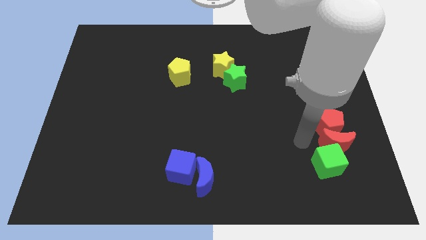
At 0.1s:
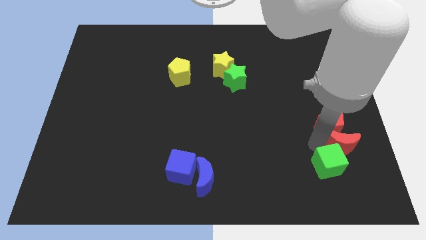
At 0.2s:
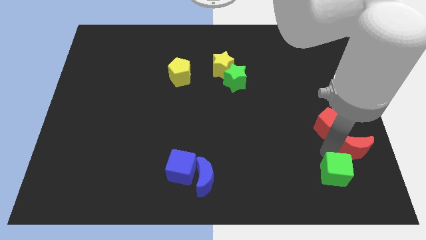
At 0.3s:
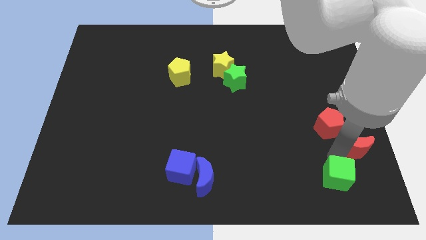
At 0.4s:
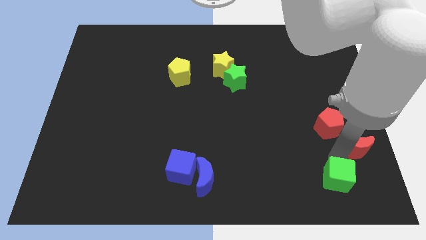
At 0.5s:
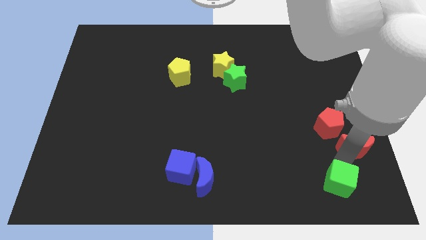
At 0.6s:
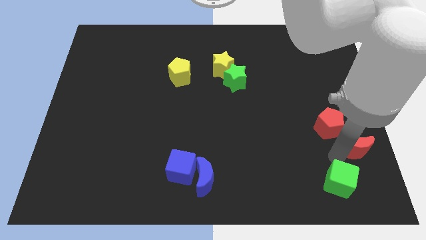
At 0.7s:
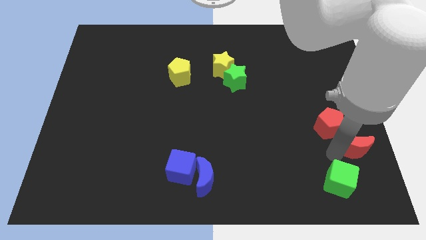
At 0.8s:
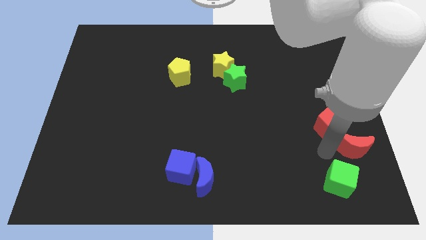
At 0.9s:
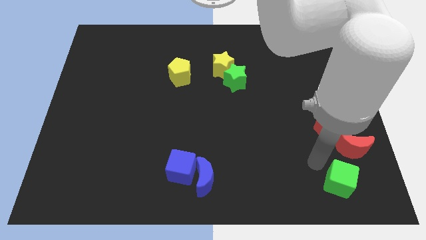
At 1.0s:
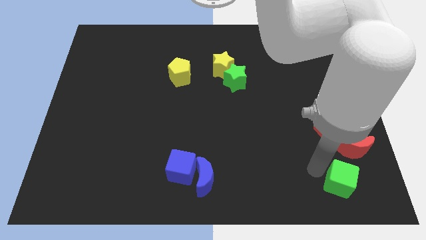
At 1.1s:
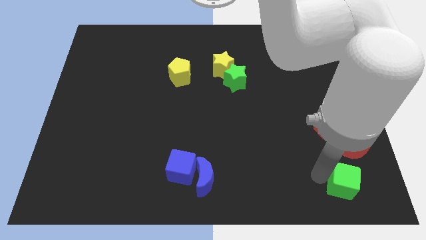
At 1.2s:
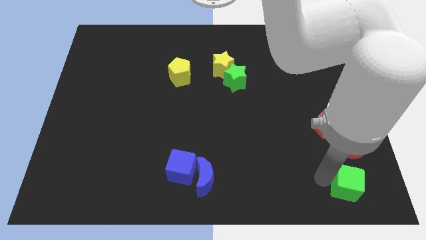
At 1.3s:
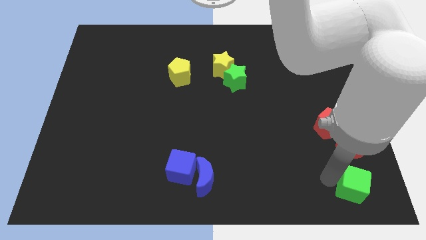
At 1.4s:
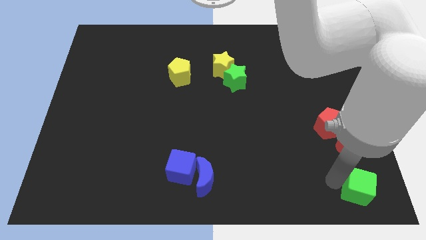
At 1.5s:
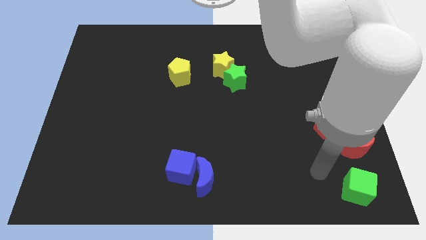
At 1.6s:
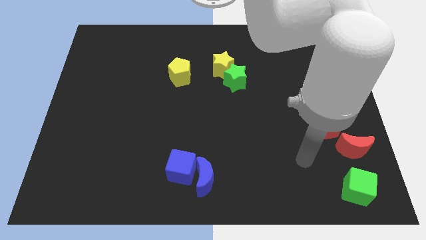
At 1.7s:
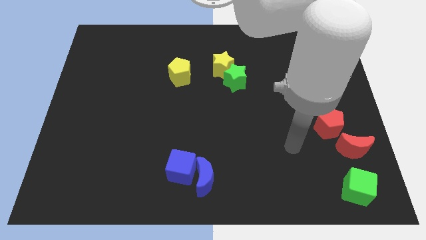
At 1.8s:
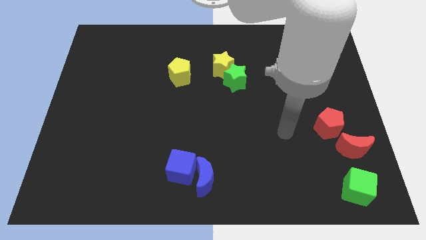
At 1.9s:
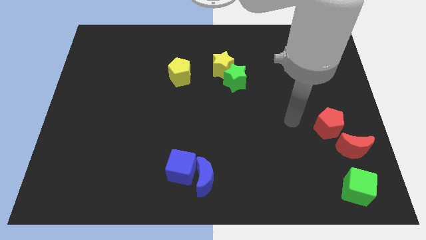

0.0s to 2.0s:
slightly push the green cube towards the bottom right

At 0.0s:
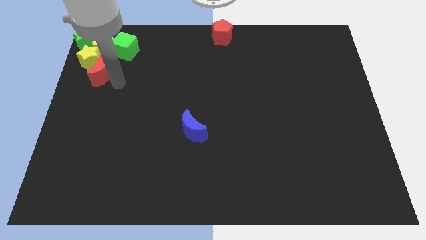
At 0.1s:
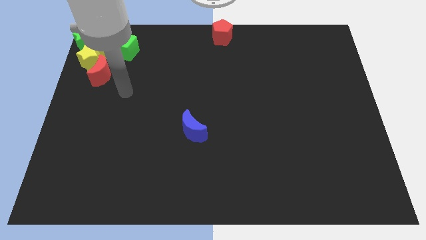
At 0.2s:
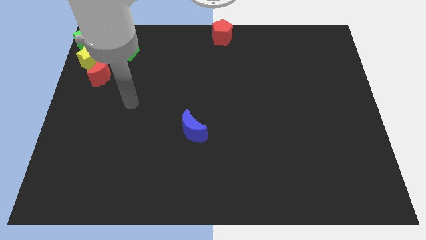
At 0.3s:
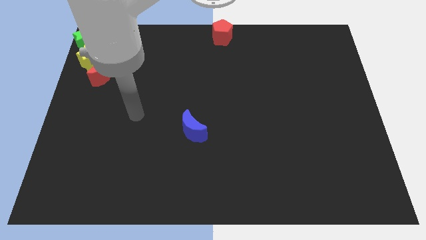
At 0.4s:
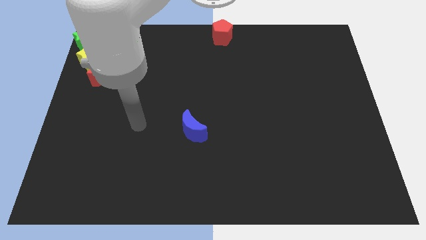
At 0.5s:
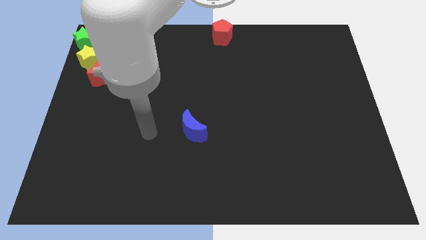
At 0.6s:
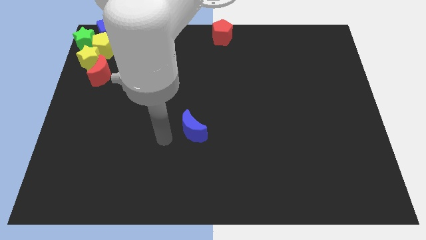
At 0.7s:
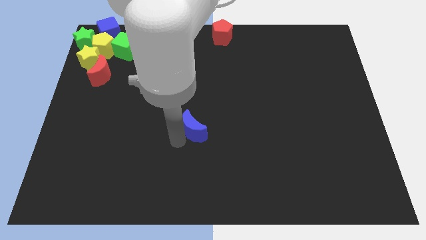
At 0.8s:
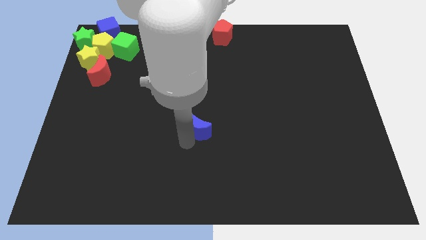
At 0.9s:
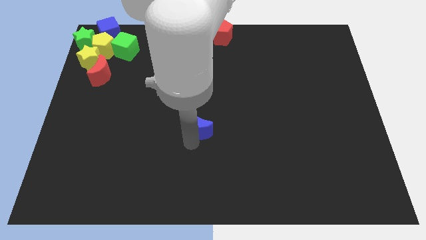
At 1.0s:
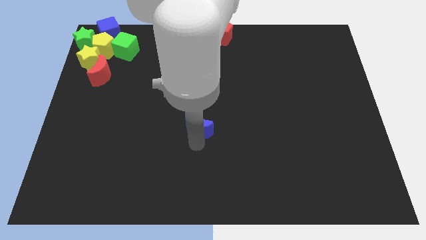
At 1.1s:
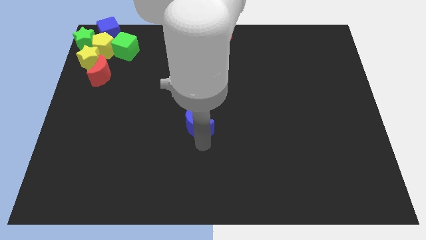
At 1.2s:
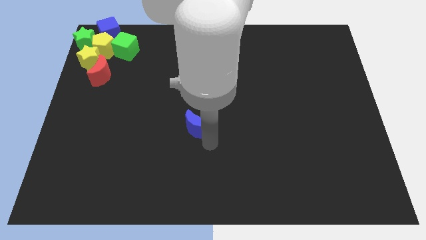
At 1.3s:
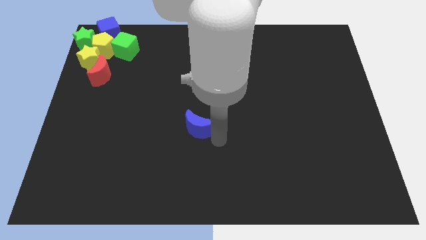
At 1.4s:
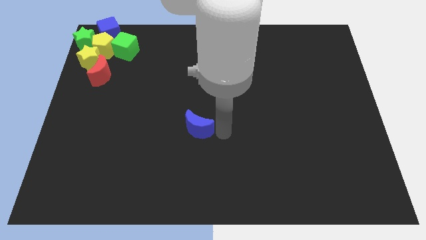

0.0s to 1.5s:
move the blue crescent slightly towards the center of the board

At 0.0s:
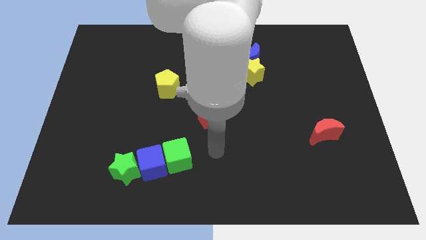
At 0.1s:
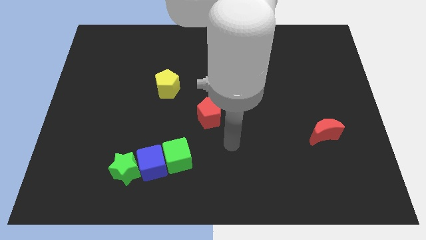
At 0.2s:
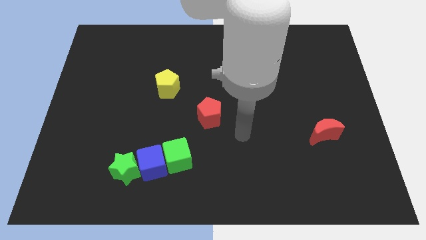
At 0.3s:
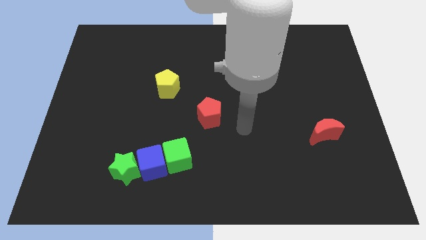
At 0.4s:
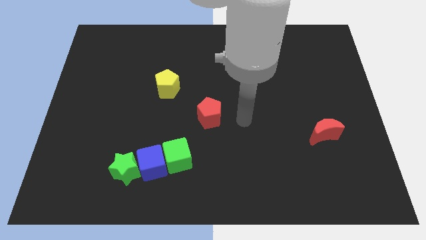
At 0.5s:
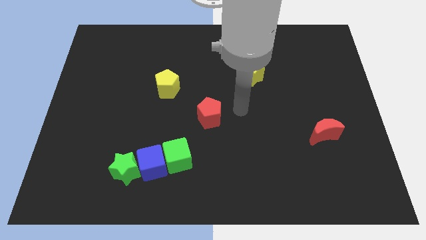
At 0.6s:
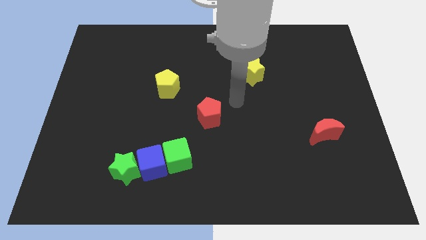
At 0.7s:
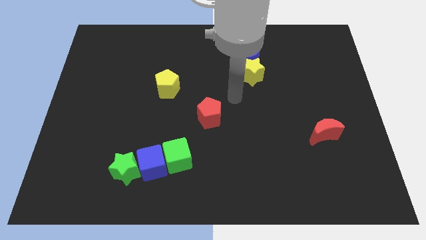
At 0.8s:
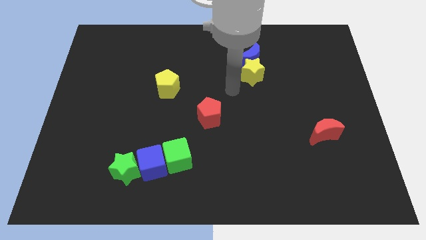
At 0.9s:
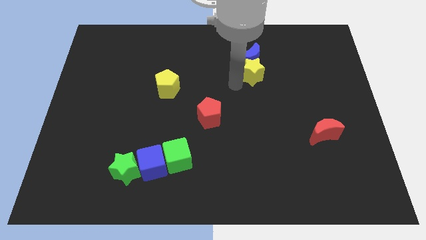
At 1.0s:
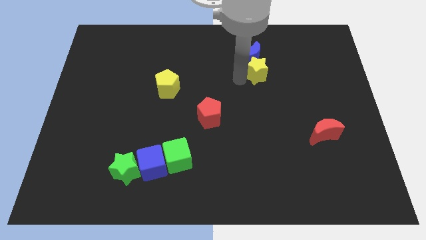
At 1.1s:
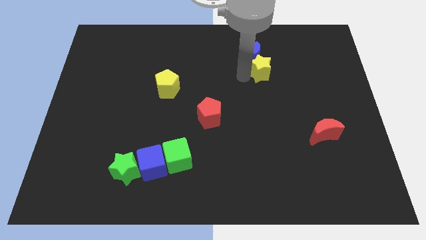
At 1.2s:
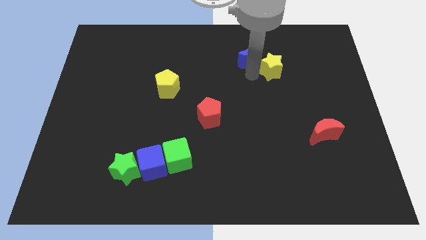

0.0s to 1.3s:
go near yellow star

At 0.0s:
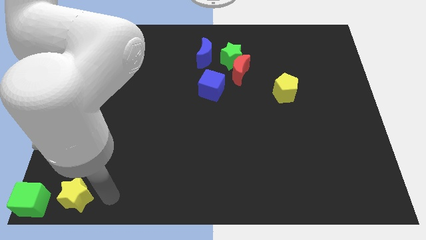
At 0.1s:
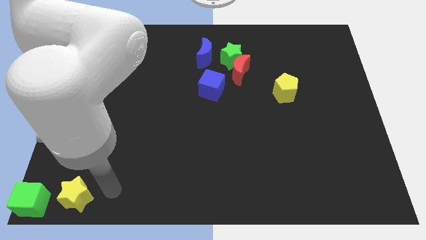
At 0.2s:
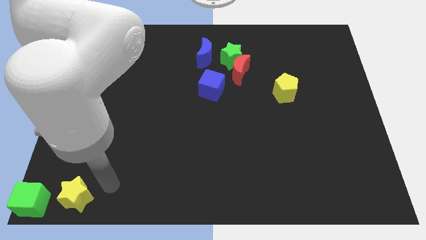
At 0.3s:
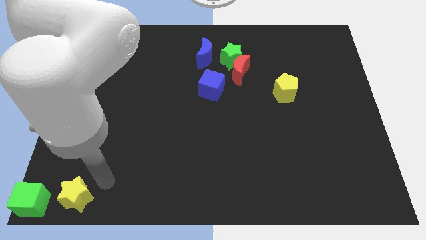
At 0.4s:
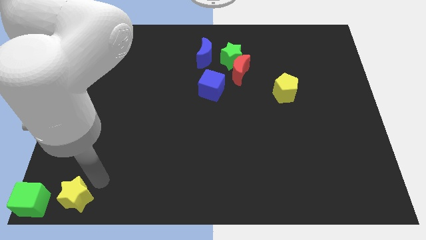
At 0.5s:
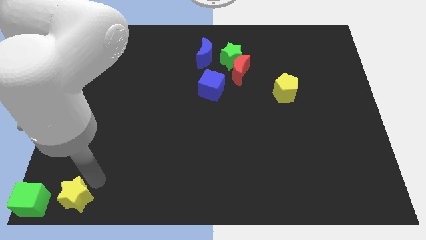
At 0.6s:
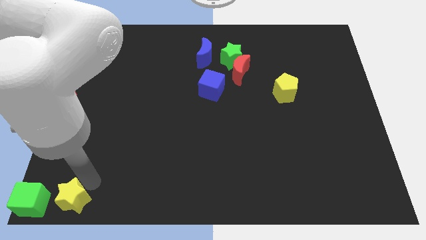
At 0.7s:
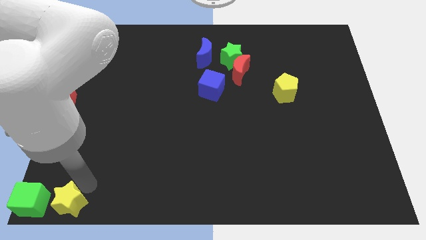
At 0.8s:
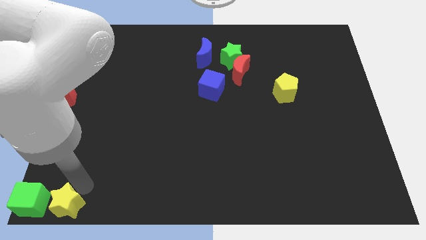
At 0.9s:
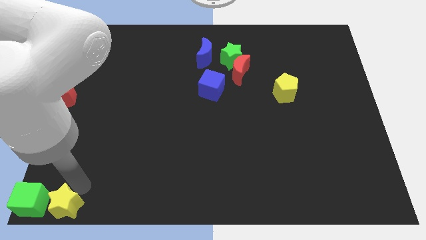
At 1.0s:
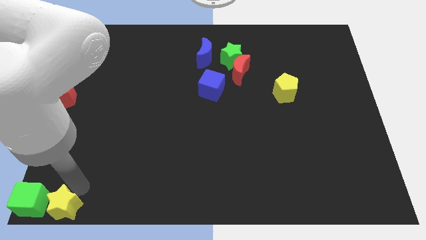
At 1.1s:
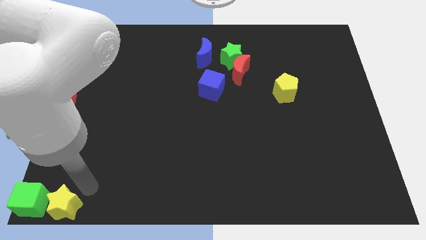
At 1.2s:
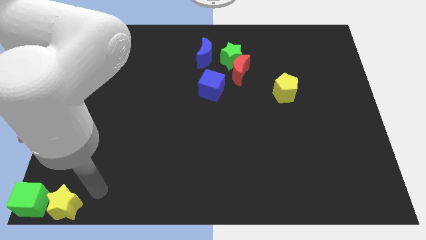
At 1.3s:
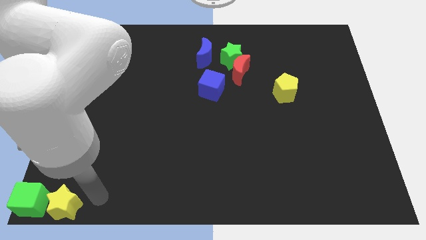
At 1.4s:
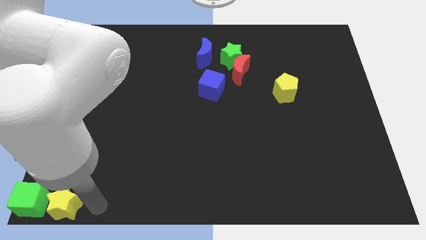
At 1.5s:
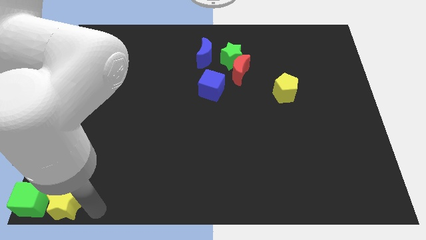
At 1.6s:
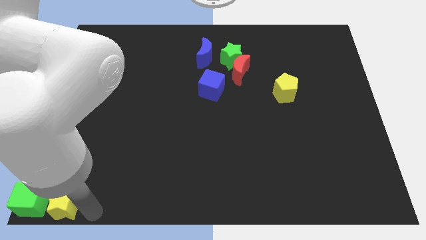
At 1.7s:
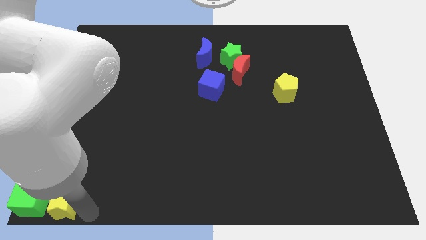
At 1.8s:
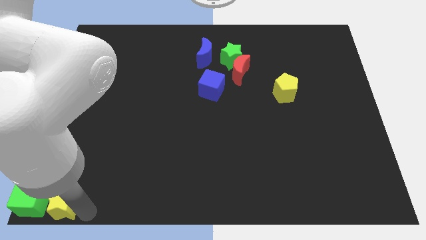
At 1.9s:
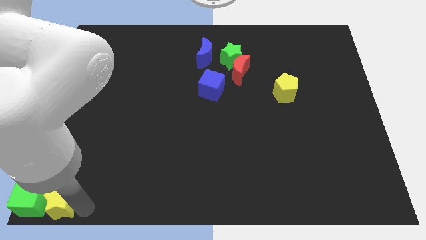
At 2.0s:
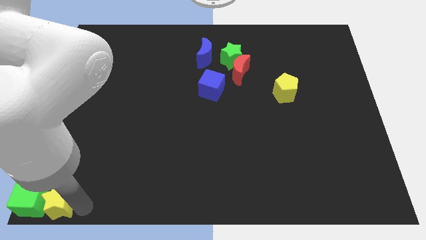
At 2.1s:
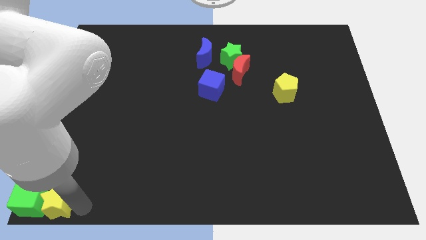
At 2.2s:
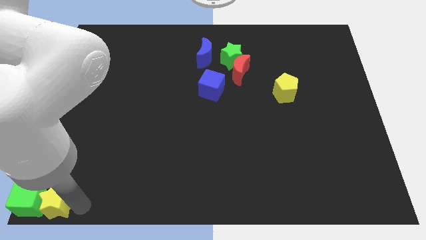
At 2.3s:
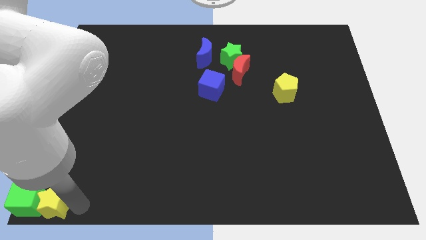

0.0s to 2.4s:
push the yellow star into the green cube

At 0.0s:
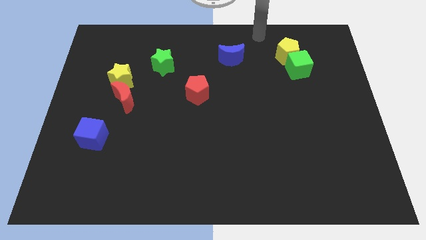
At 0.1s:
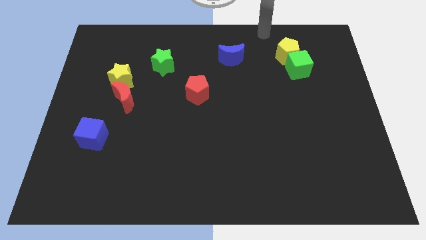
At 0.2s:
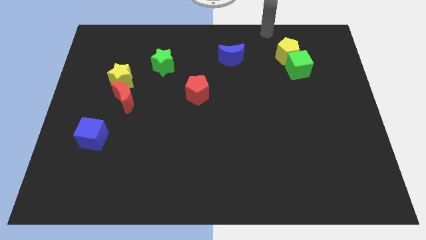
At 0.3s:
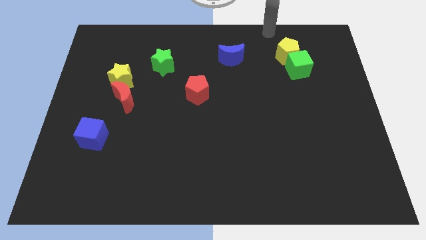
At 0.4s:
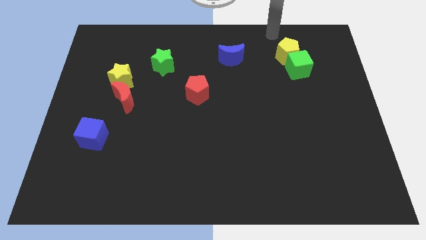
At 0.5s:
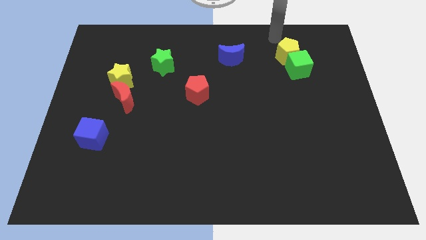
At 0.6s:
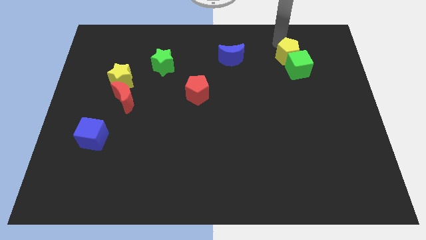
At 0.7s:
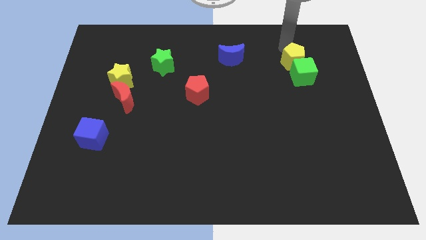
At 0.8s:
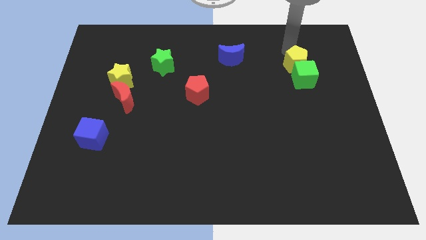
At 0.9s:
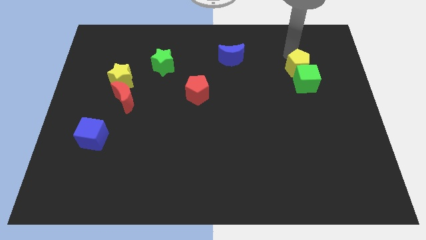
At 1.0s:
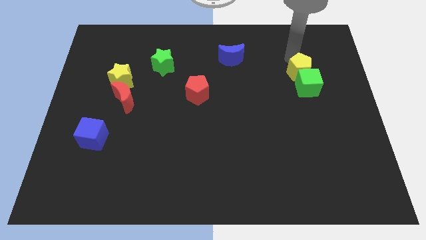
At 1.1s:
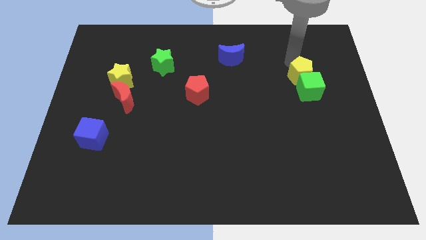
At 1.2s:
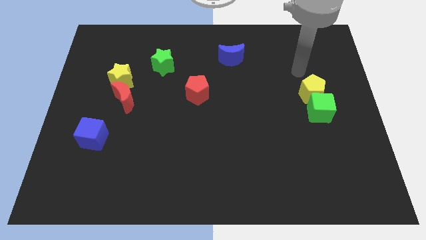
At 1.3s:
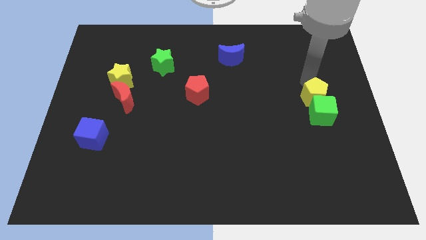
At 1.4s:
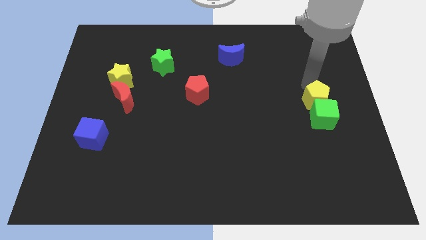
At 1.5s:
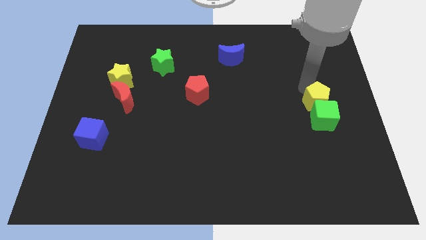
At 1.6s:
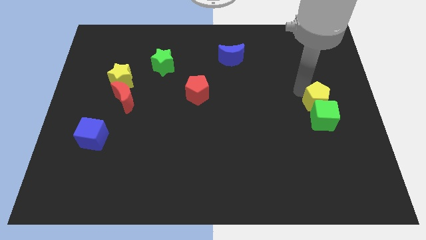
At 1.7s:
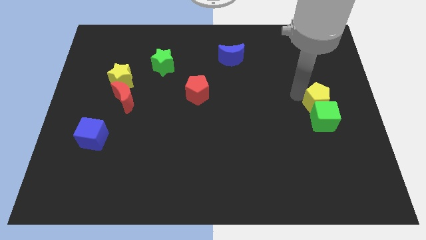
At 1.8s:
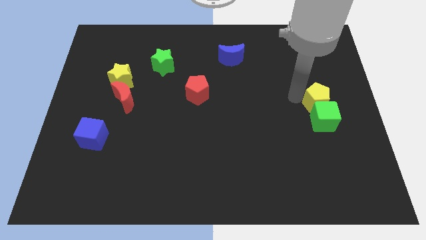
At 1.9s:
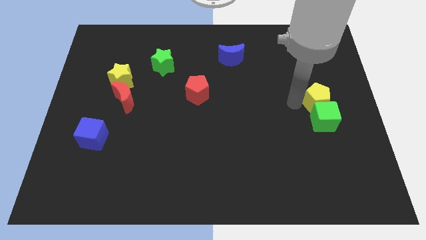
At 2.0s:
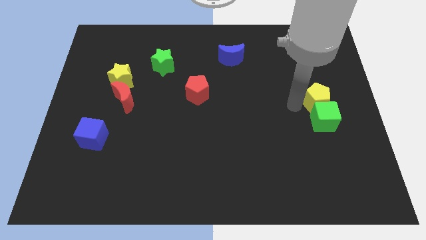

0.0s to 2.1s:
push the yellow pentagon with green cube towards bottom

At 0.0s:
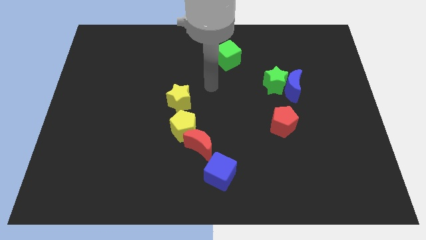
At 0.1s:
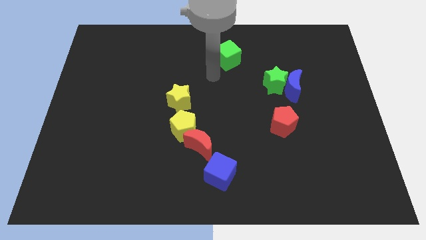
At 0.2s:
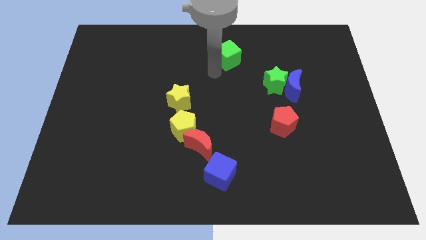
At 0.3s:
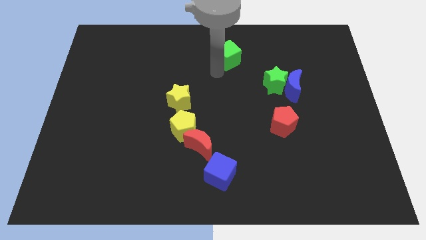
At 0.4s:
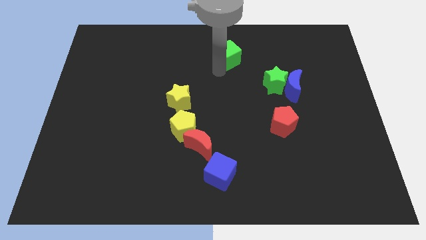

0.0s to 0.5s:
place the arm down to the green cube
